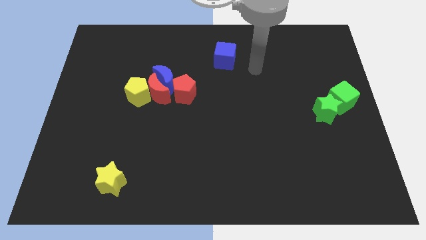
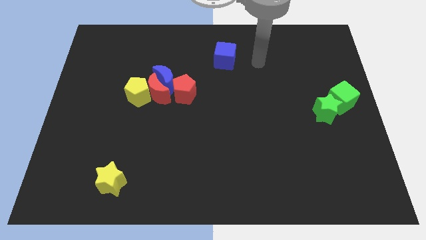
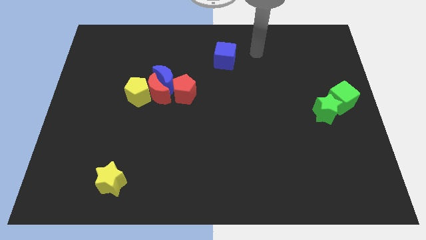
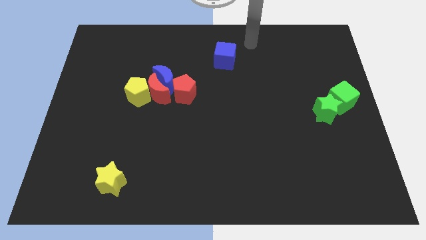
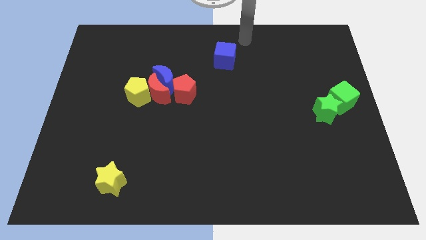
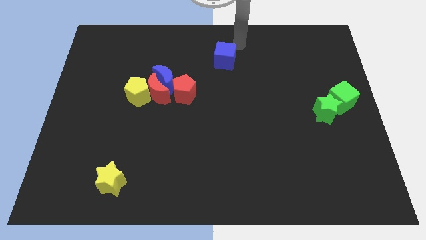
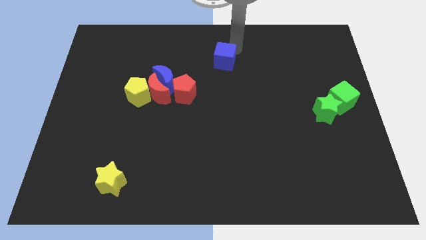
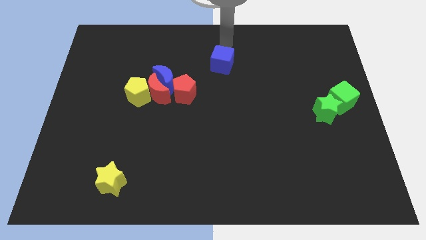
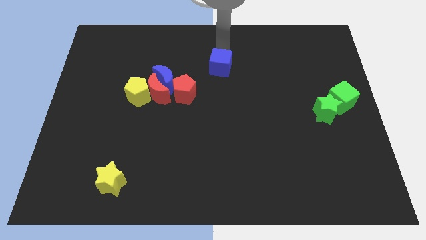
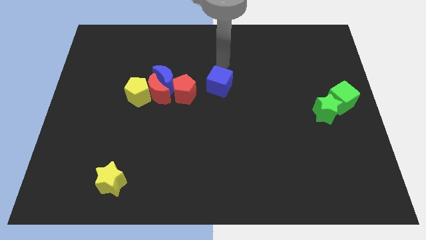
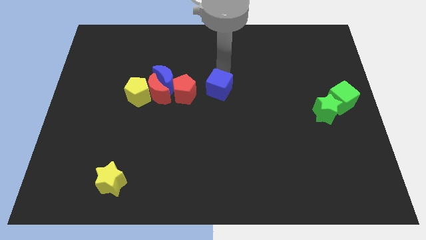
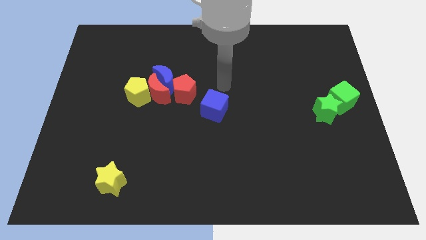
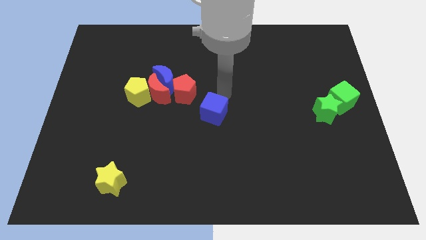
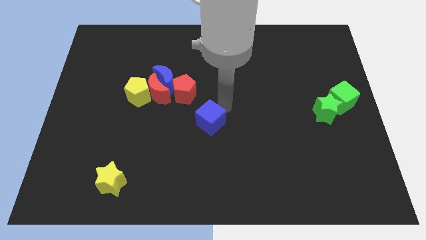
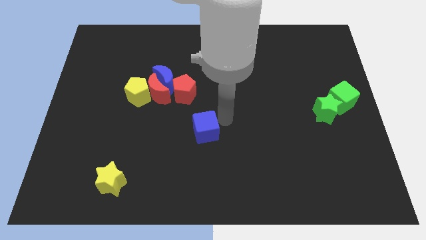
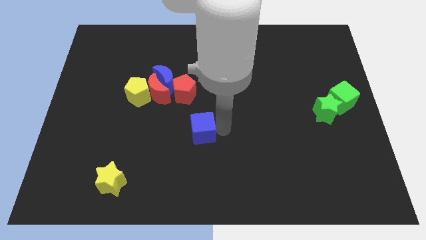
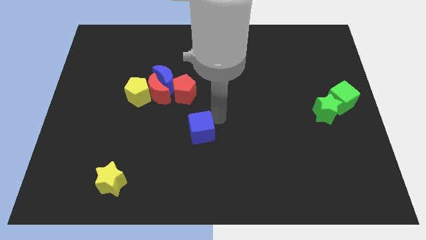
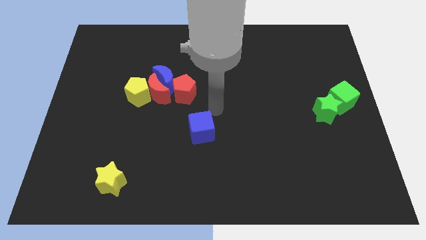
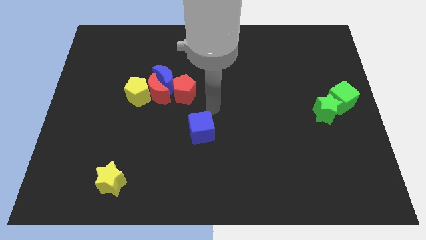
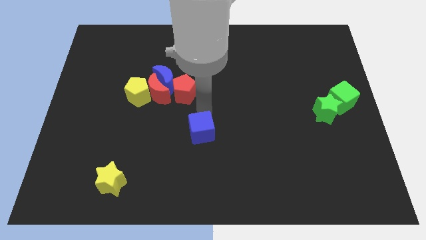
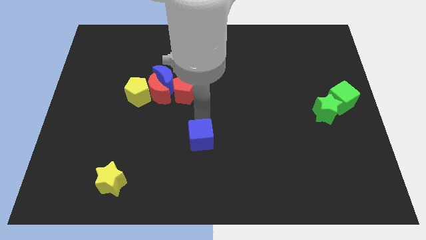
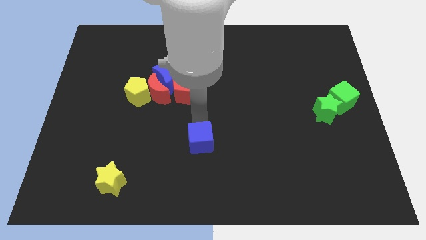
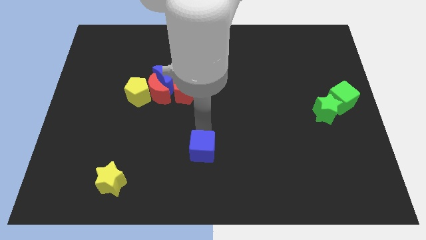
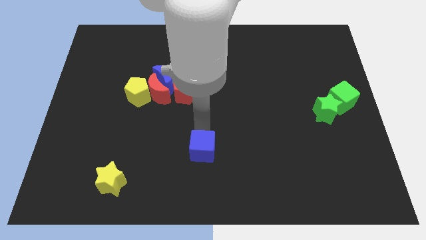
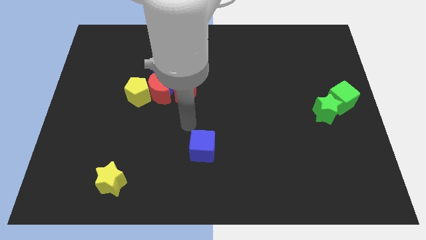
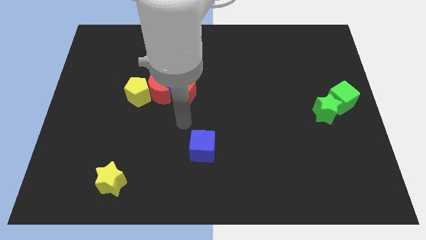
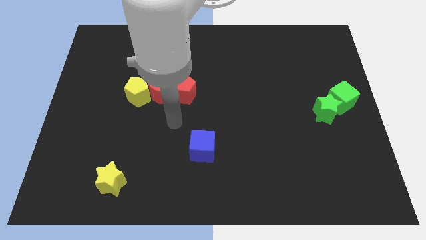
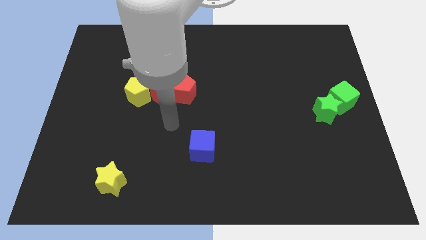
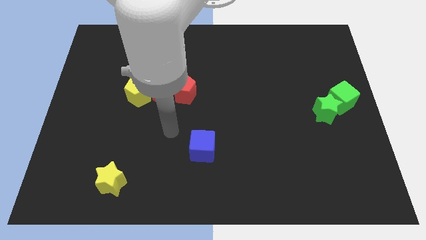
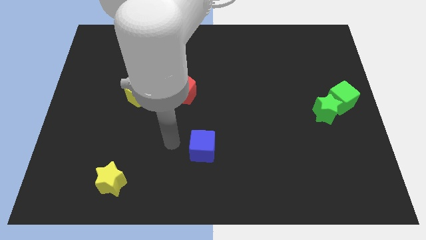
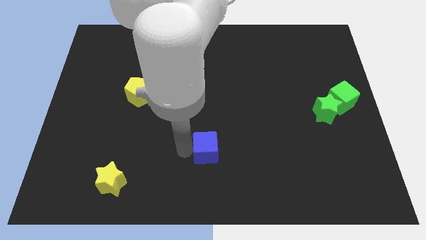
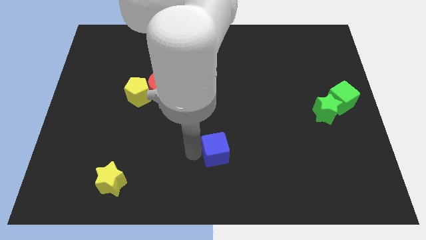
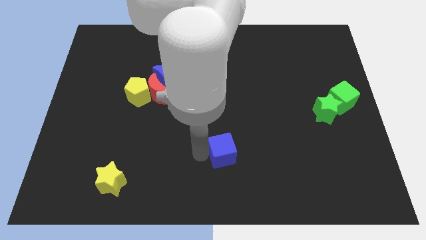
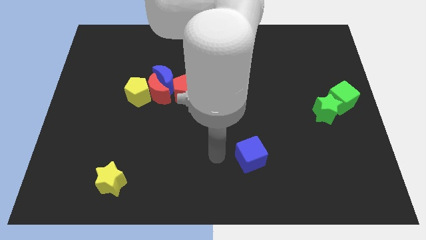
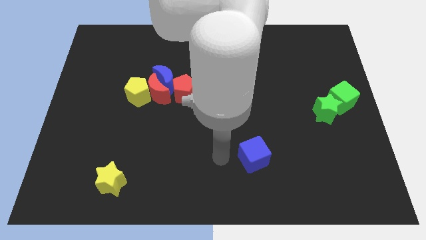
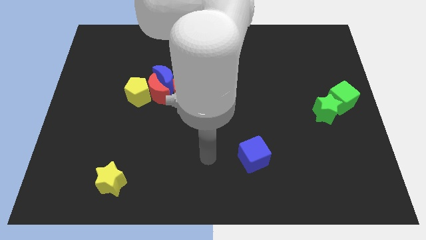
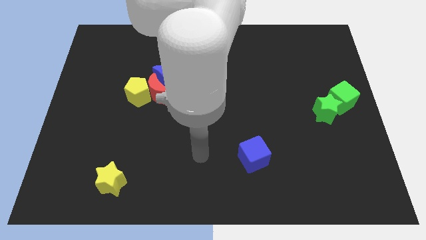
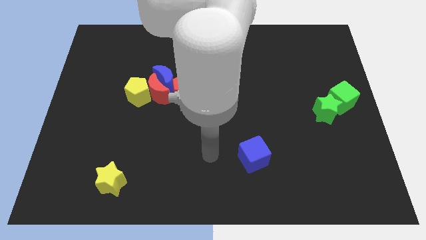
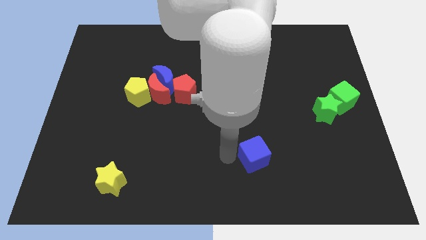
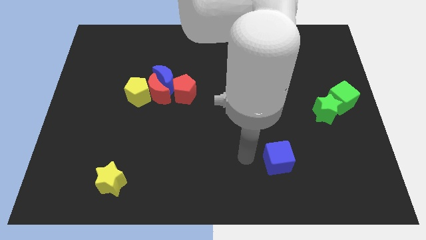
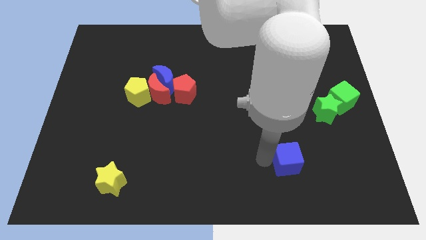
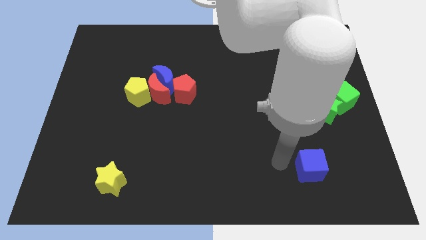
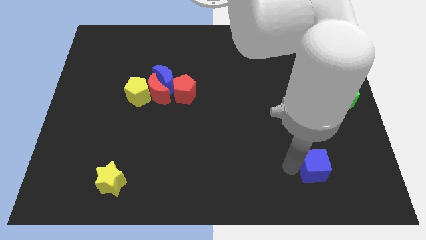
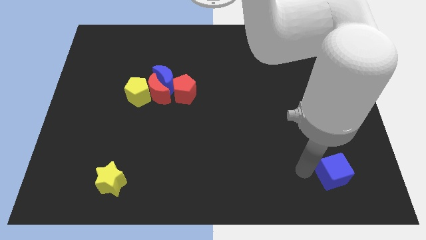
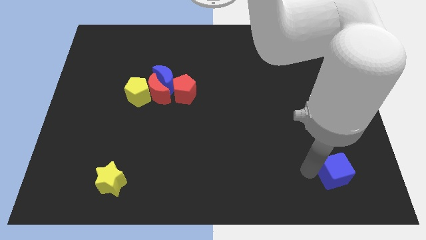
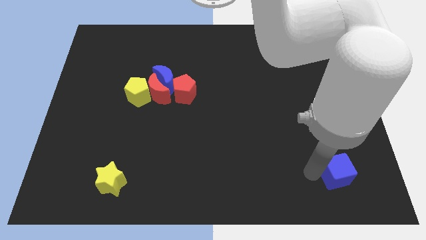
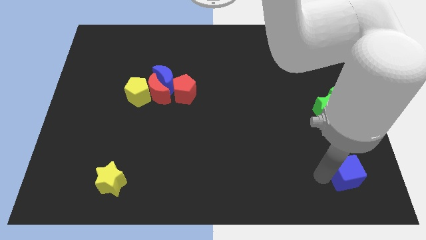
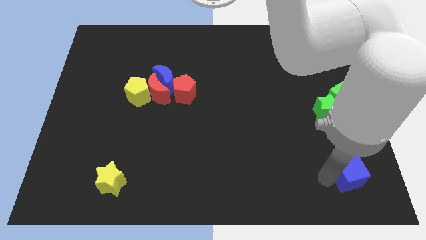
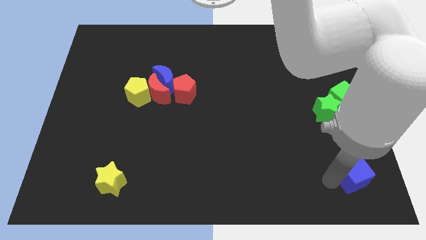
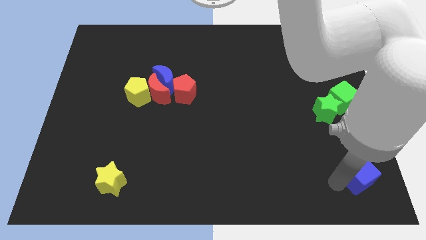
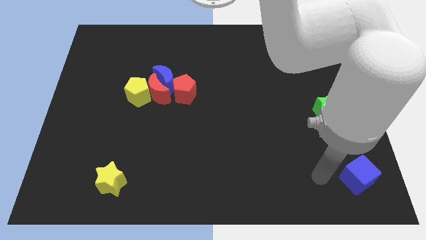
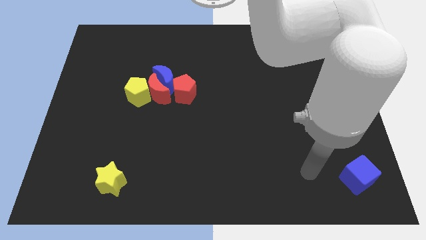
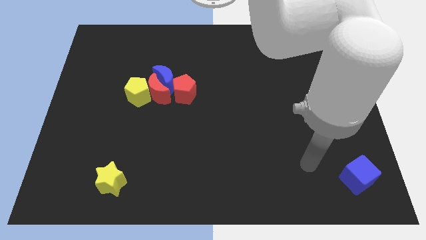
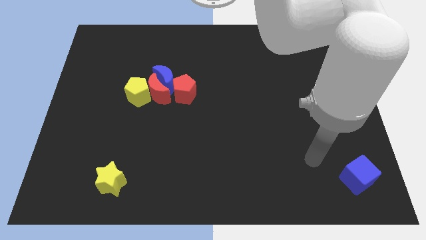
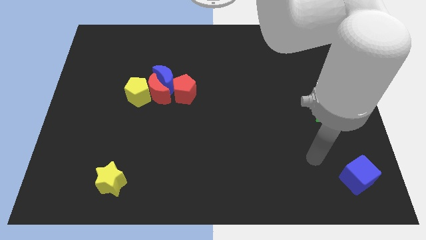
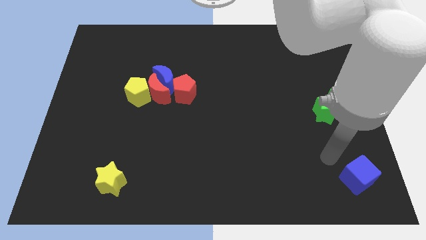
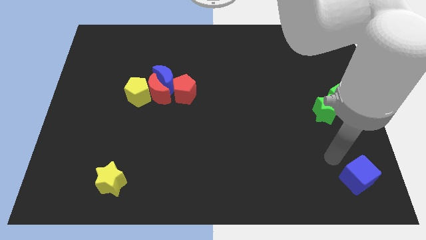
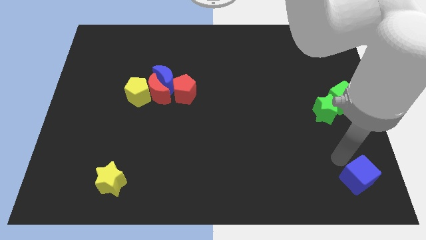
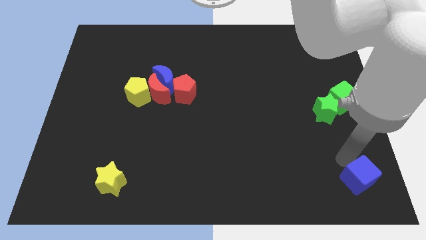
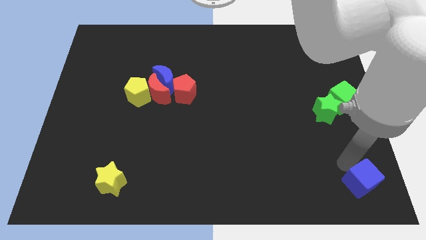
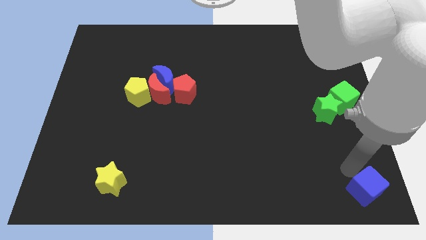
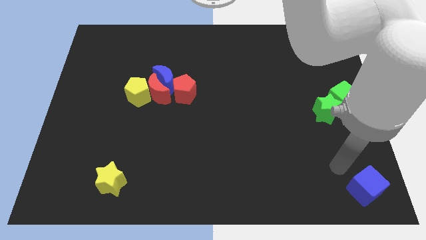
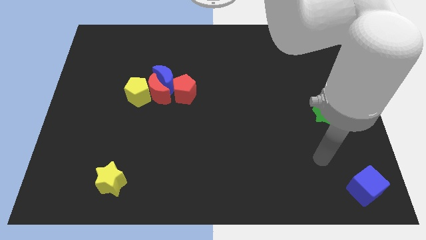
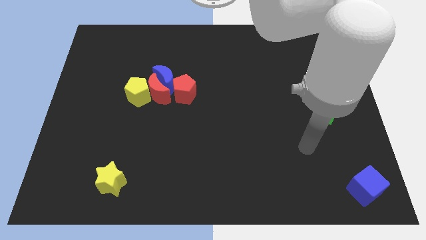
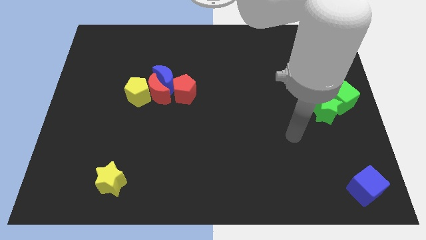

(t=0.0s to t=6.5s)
push the blue cube towards the bottom right of the board

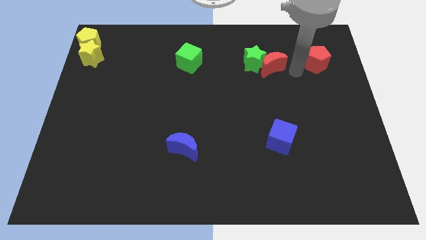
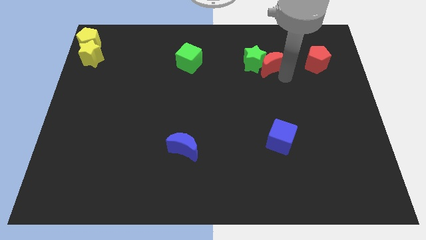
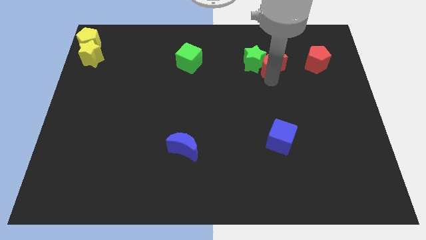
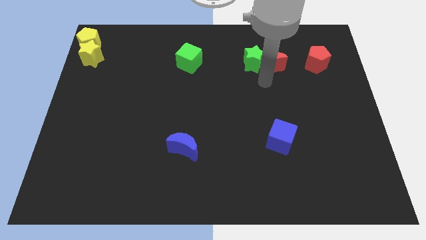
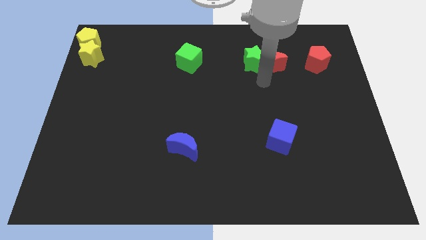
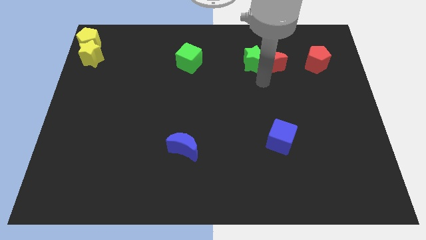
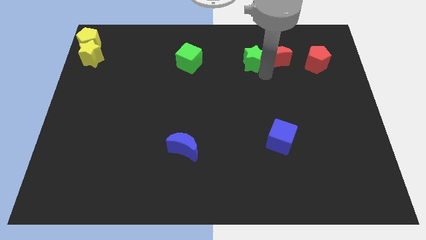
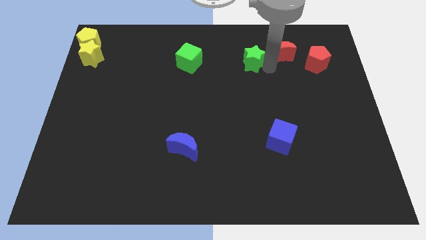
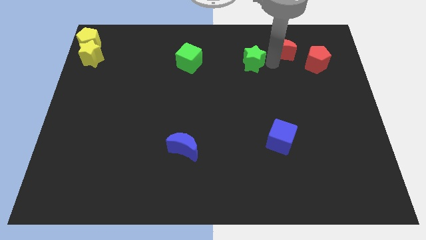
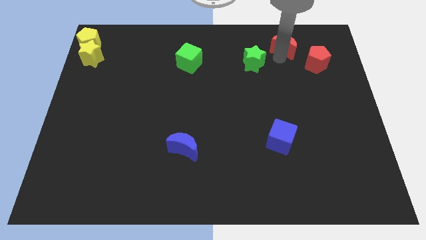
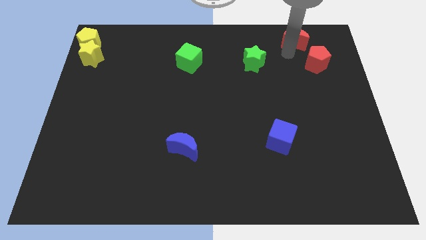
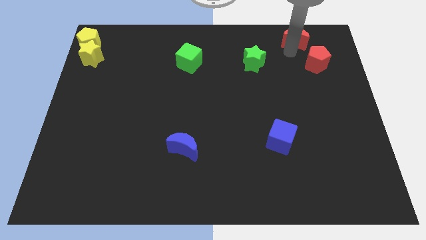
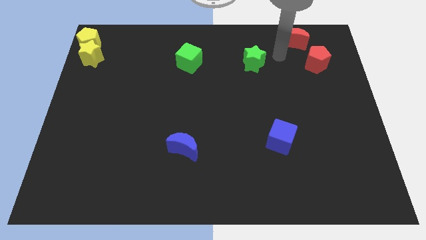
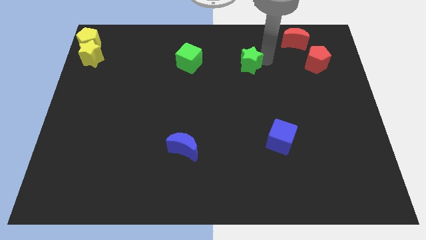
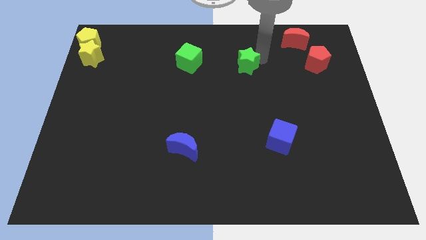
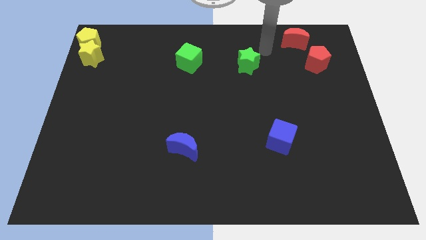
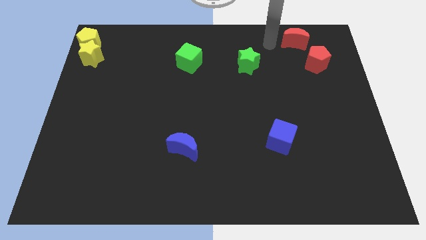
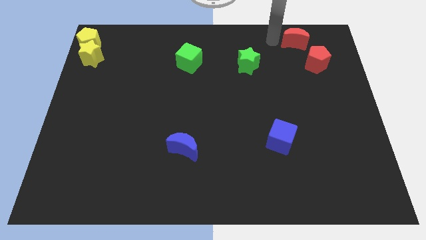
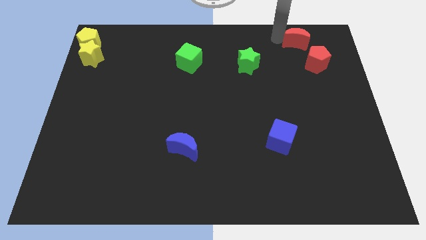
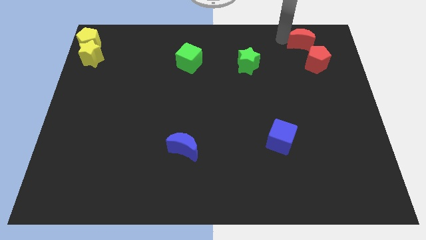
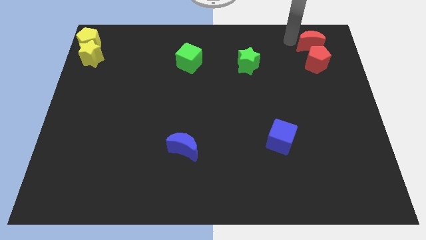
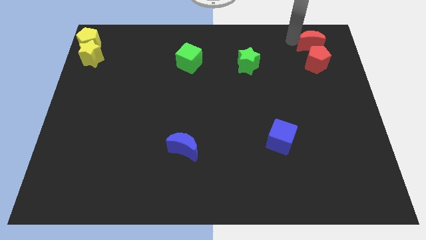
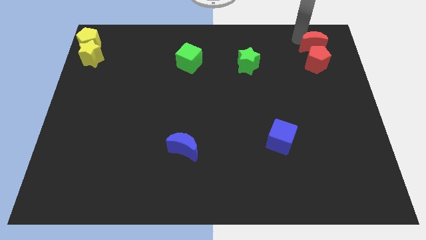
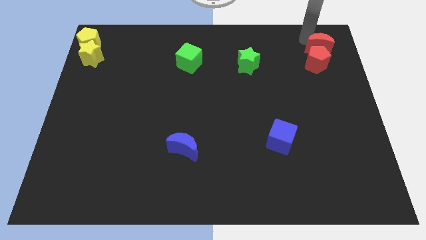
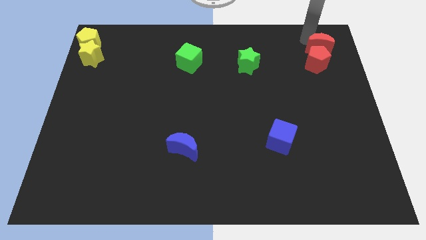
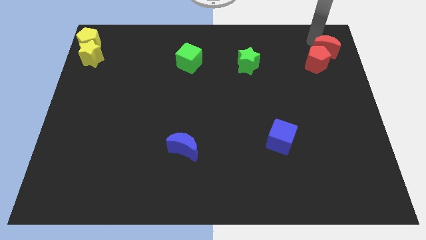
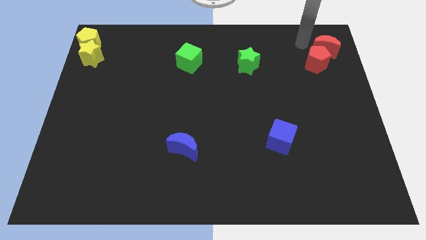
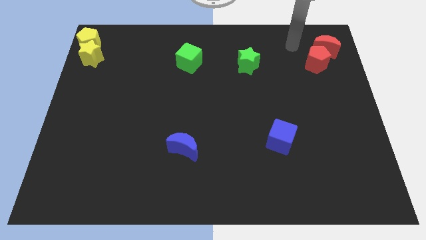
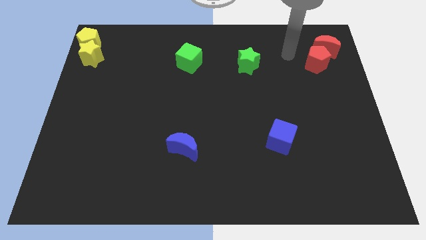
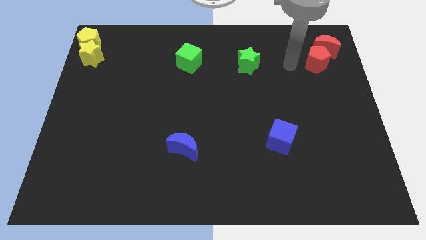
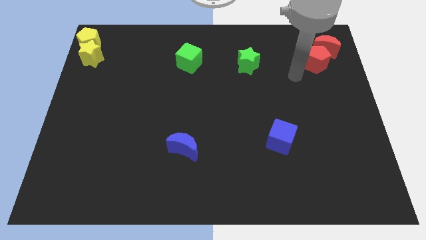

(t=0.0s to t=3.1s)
move the red crescent to the top of the red pentagon
